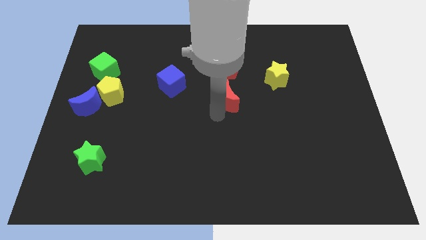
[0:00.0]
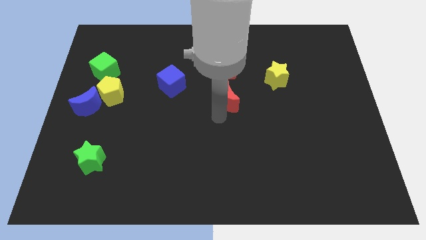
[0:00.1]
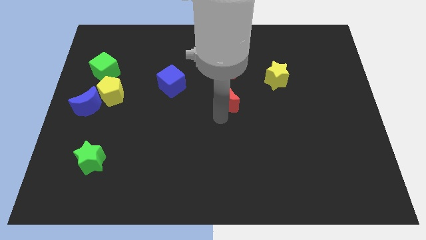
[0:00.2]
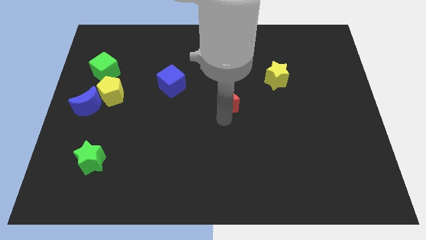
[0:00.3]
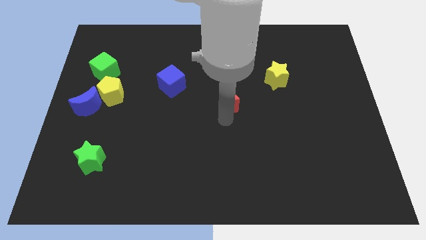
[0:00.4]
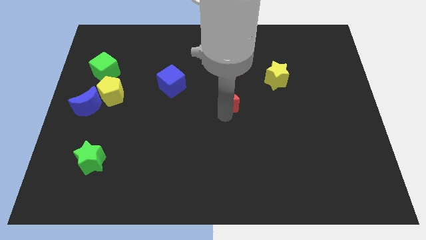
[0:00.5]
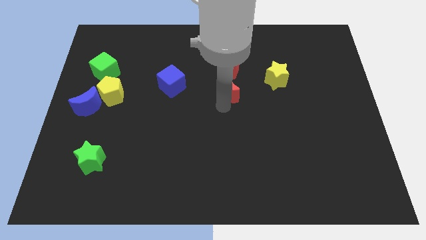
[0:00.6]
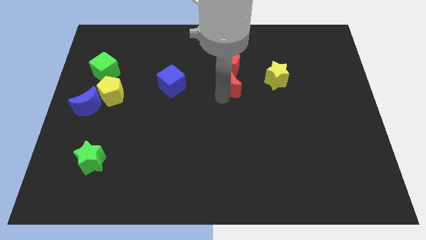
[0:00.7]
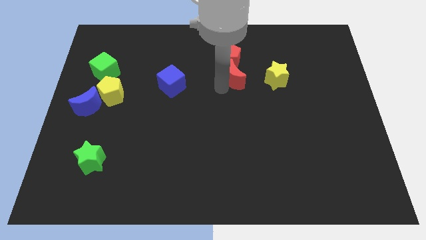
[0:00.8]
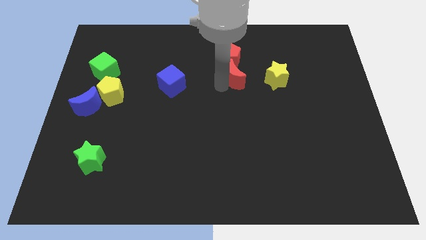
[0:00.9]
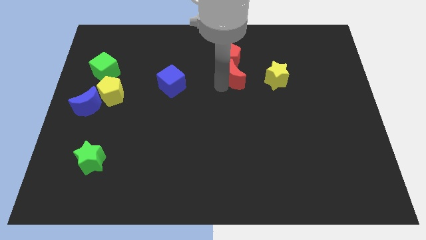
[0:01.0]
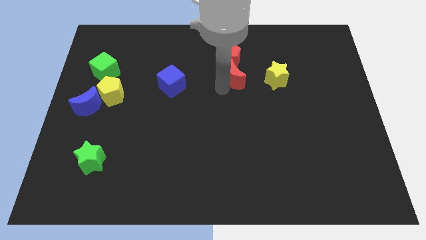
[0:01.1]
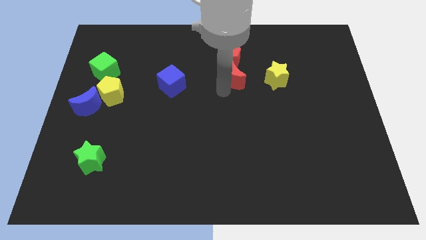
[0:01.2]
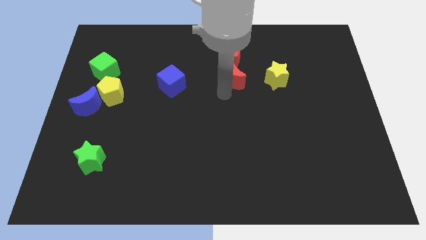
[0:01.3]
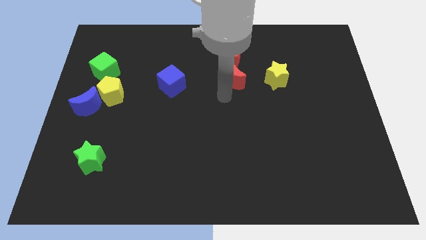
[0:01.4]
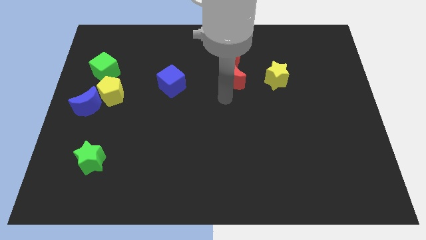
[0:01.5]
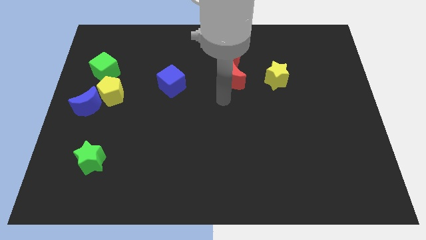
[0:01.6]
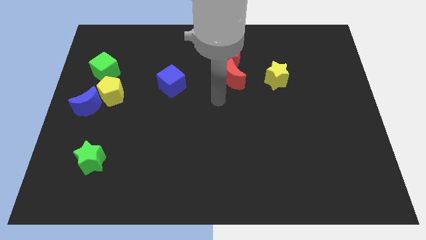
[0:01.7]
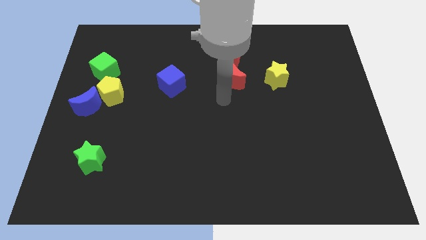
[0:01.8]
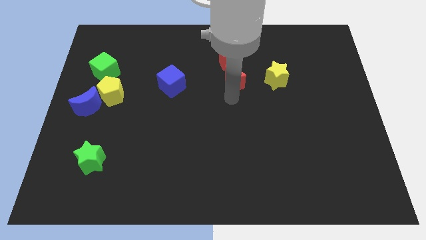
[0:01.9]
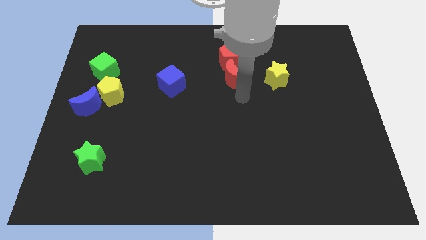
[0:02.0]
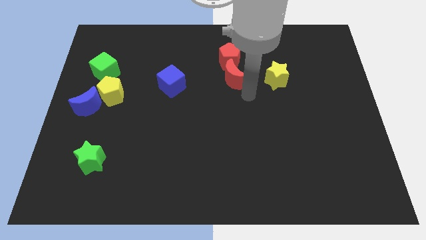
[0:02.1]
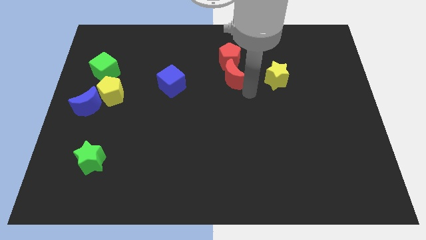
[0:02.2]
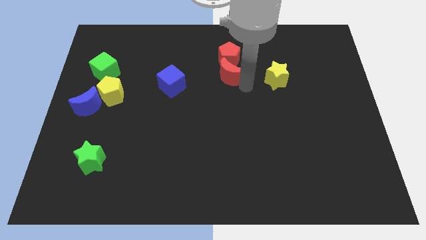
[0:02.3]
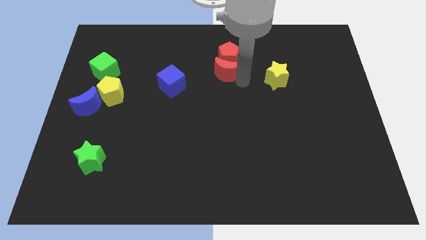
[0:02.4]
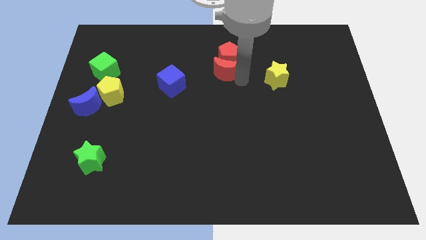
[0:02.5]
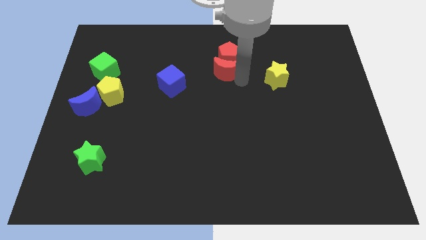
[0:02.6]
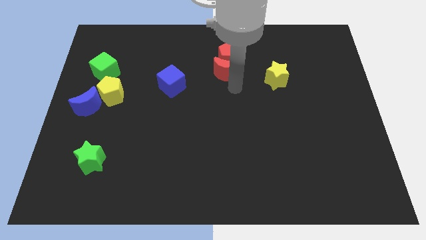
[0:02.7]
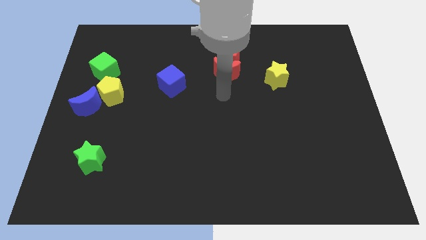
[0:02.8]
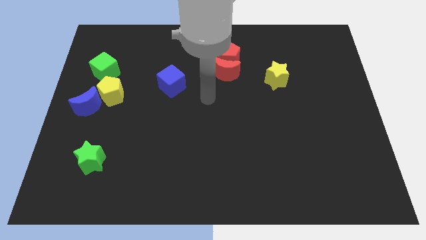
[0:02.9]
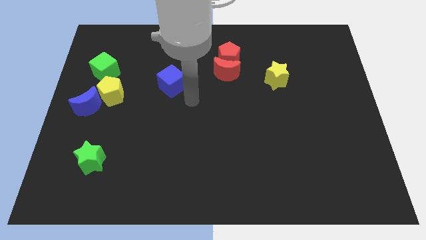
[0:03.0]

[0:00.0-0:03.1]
move the red crescent into red pentagon

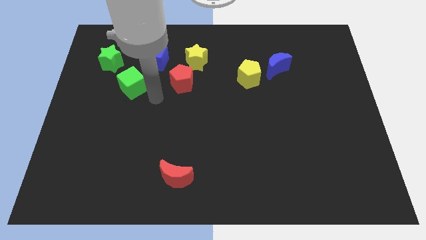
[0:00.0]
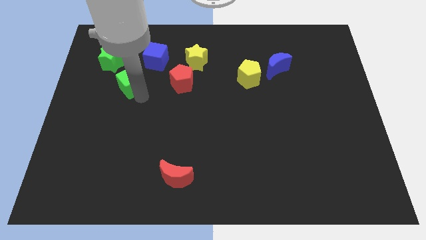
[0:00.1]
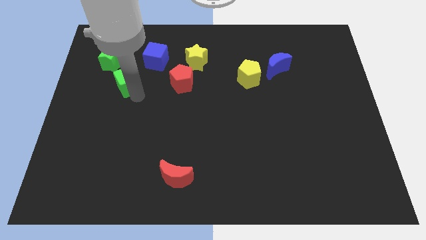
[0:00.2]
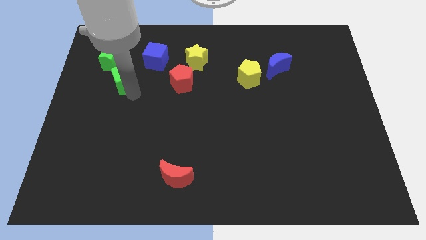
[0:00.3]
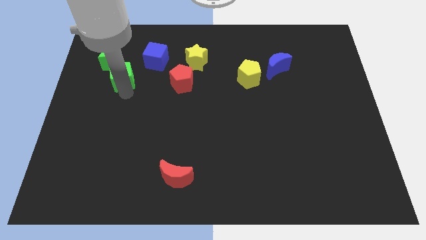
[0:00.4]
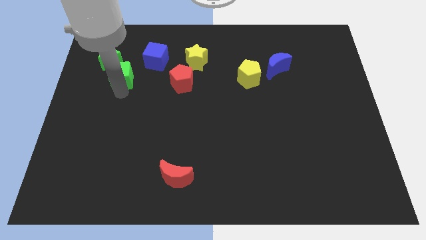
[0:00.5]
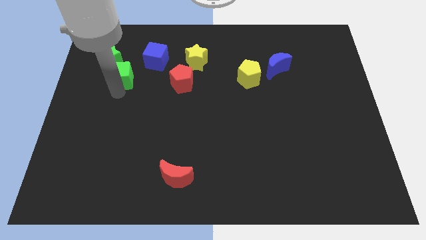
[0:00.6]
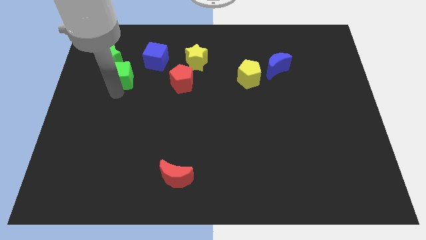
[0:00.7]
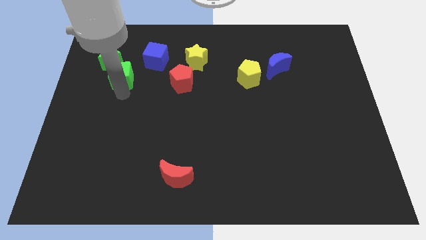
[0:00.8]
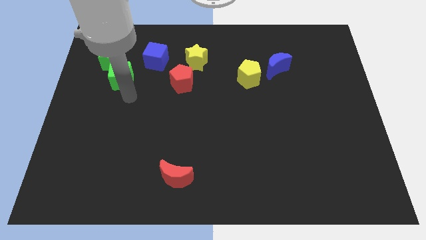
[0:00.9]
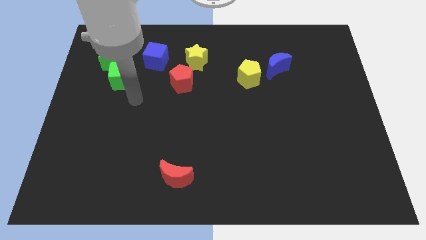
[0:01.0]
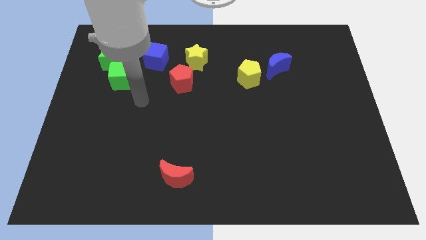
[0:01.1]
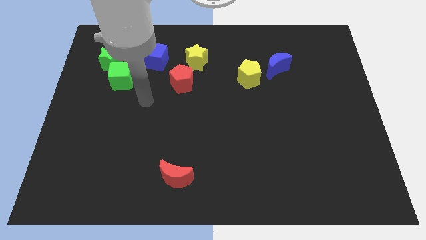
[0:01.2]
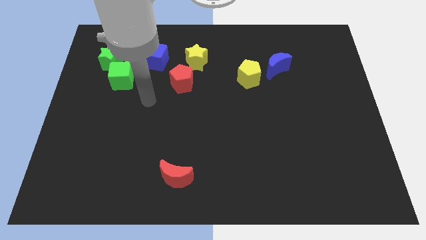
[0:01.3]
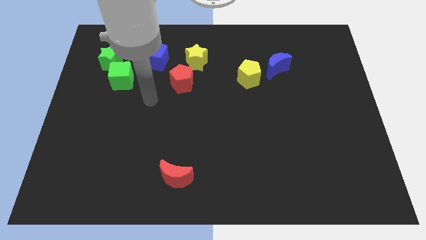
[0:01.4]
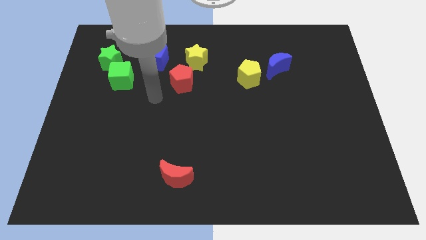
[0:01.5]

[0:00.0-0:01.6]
push the green cube close to the green star

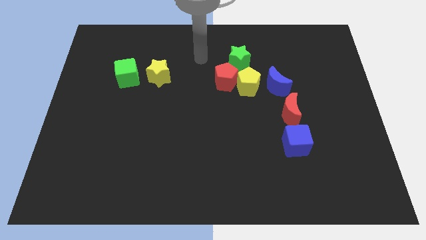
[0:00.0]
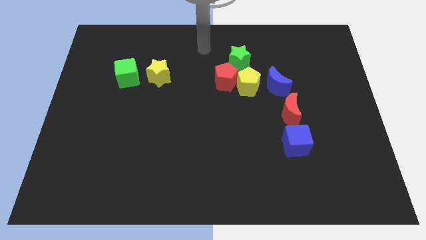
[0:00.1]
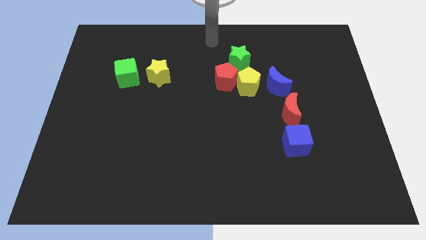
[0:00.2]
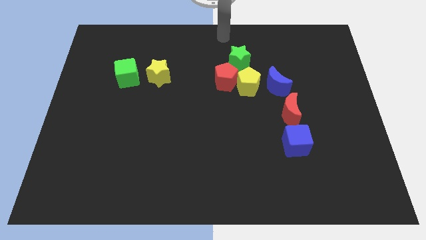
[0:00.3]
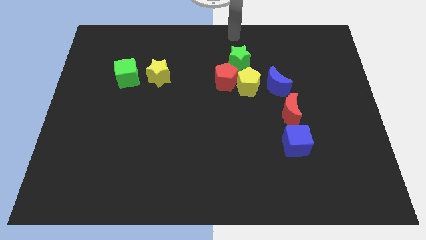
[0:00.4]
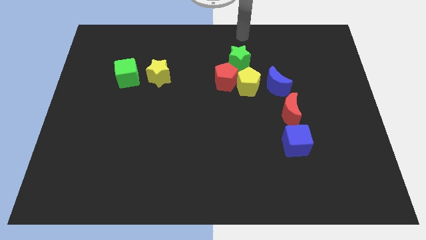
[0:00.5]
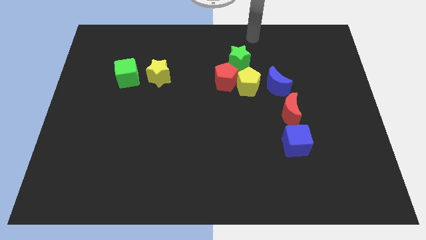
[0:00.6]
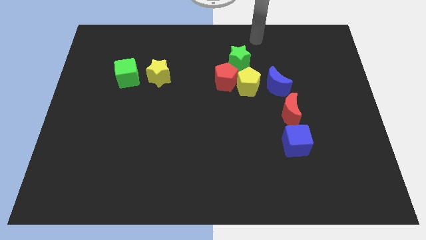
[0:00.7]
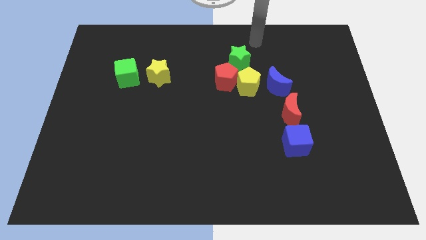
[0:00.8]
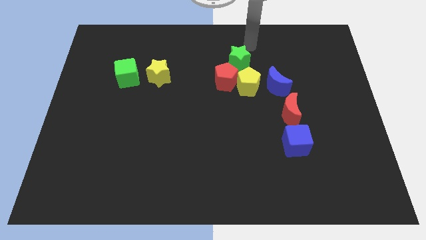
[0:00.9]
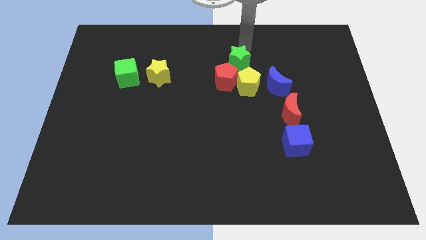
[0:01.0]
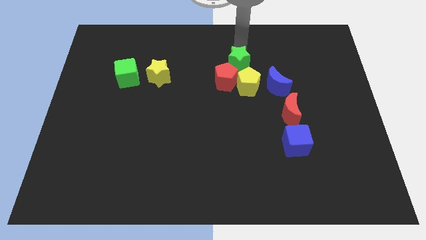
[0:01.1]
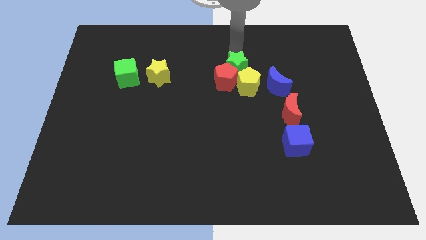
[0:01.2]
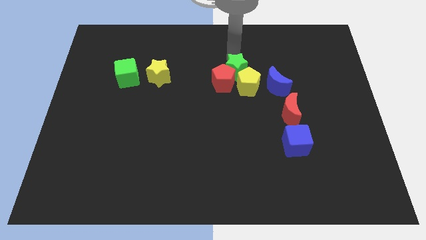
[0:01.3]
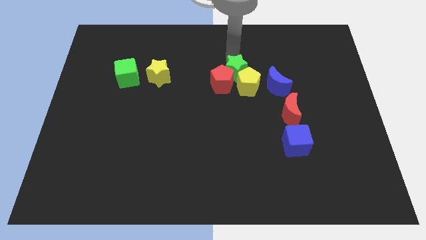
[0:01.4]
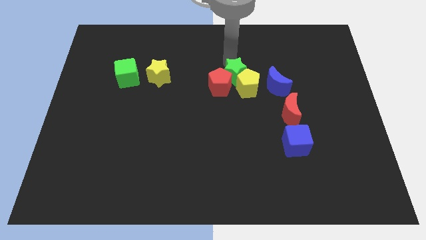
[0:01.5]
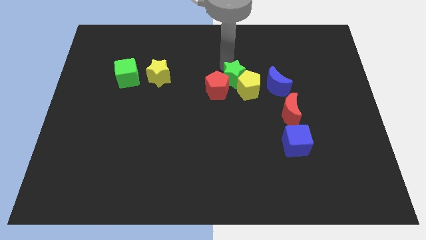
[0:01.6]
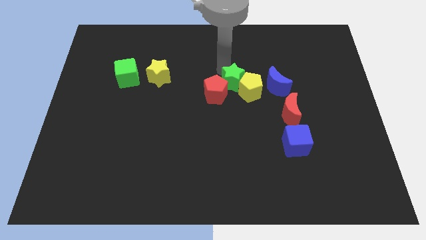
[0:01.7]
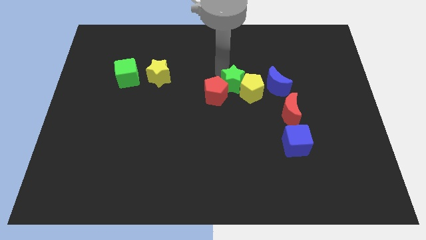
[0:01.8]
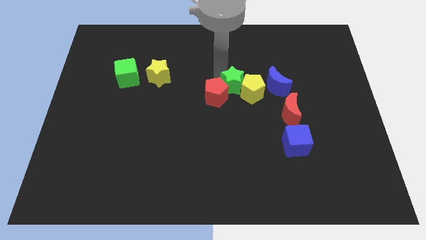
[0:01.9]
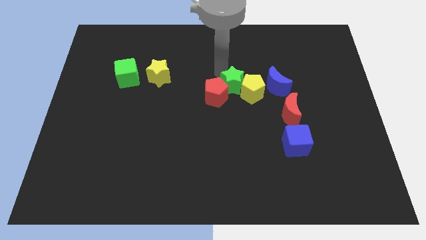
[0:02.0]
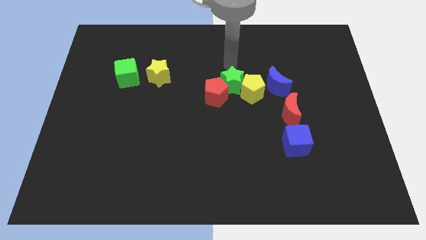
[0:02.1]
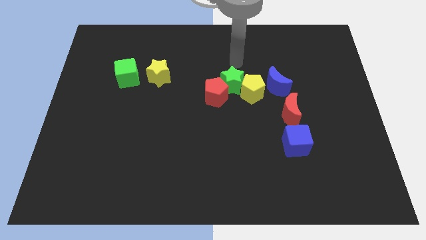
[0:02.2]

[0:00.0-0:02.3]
push the green star slightly downwards

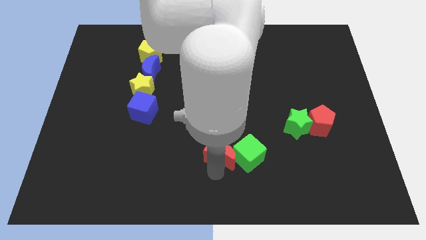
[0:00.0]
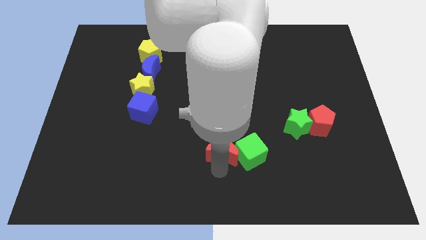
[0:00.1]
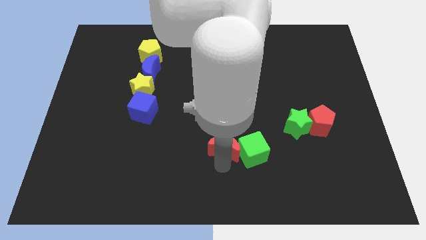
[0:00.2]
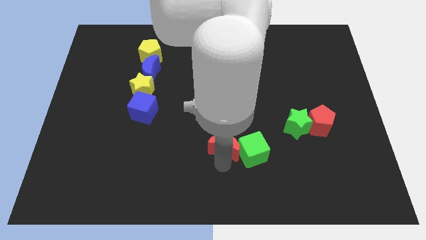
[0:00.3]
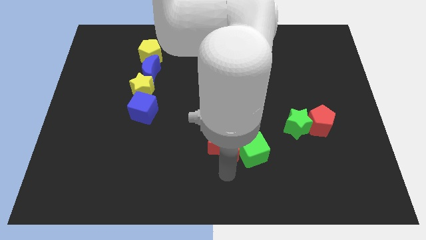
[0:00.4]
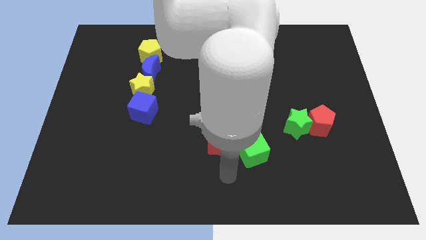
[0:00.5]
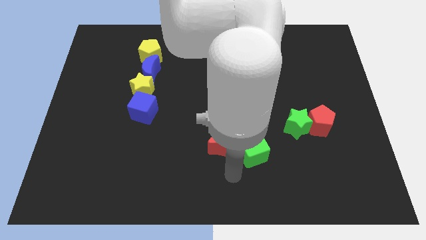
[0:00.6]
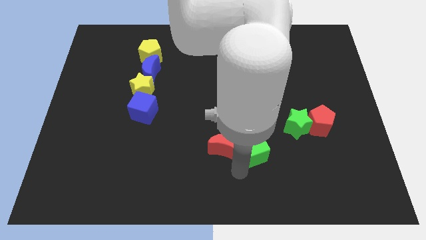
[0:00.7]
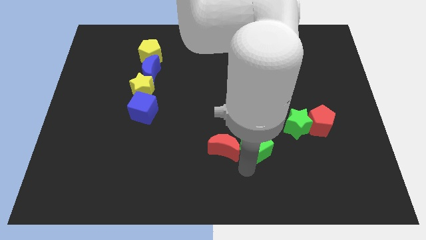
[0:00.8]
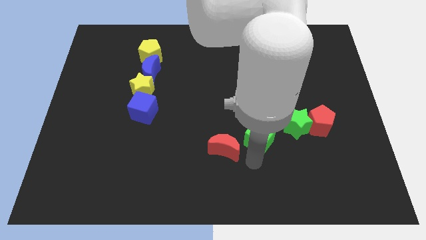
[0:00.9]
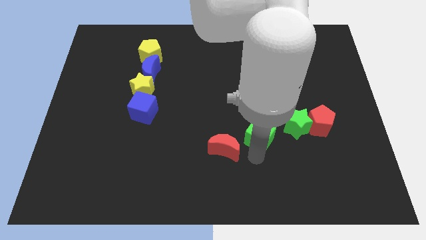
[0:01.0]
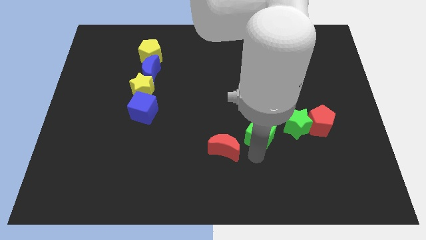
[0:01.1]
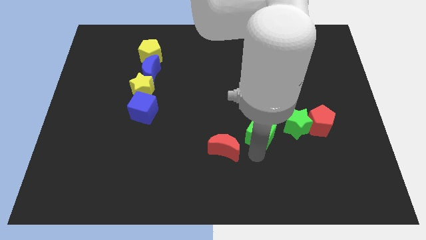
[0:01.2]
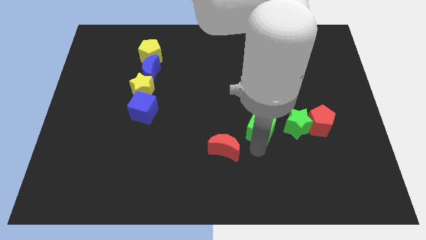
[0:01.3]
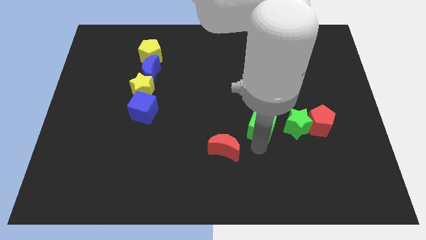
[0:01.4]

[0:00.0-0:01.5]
separate the green cube and the red moon

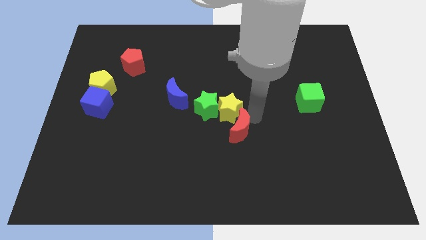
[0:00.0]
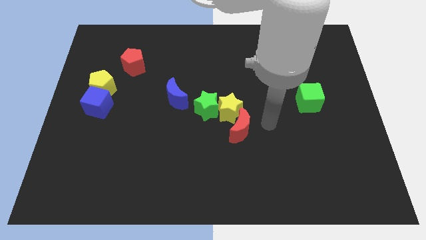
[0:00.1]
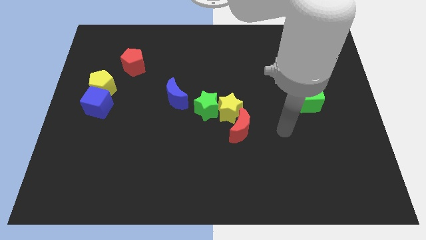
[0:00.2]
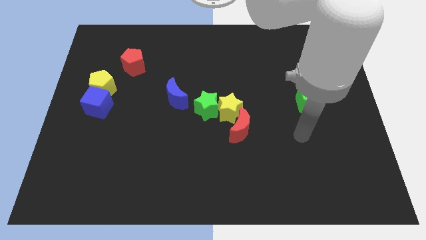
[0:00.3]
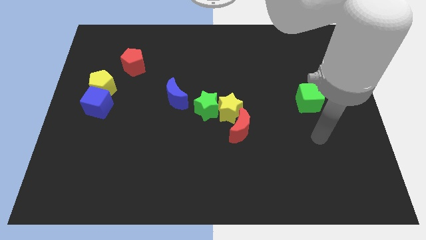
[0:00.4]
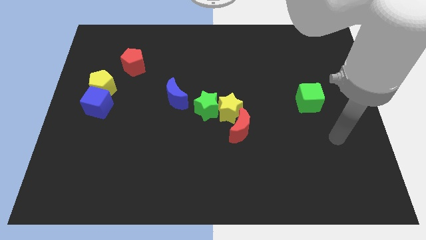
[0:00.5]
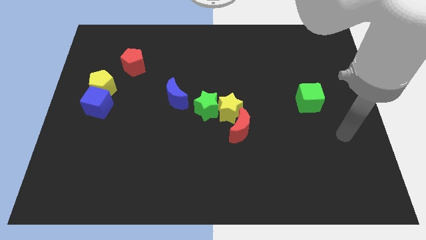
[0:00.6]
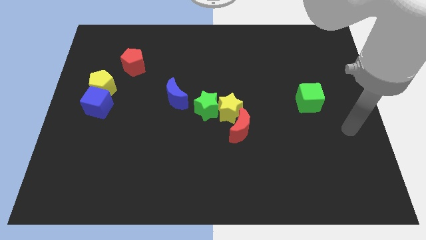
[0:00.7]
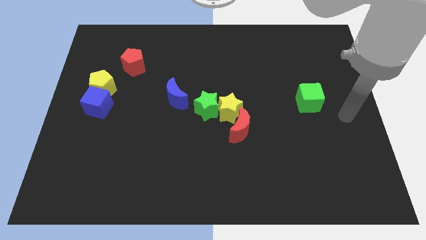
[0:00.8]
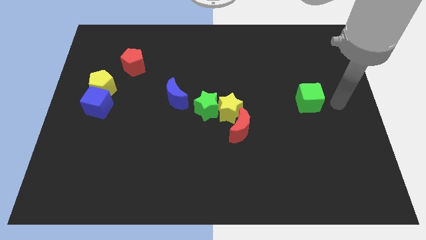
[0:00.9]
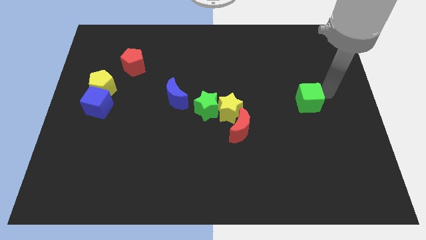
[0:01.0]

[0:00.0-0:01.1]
go and touch the right side of the green cube
